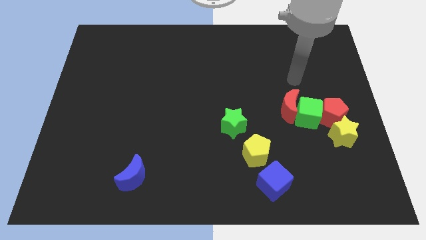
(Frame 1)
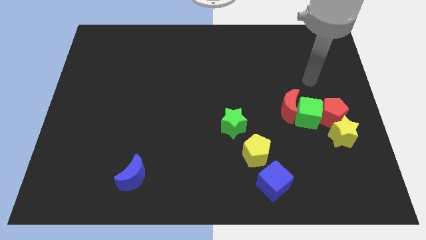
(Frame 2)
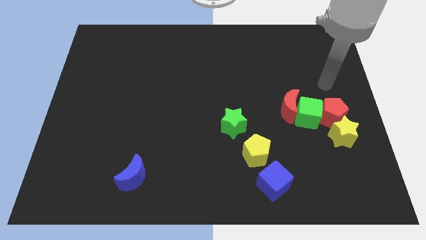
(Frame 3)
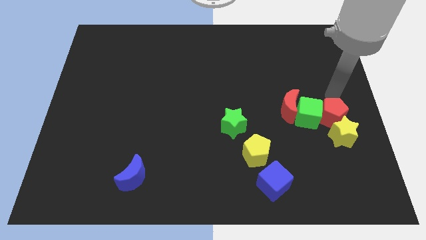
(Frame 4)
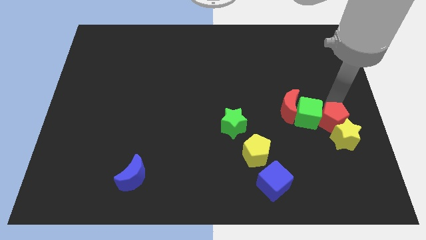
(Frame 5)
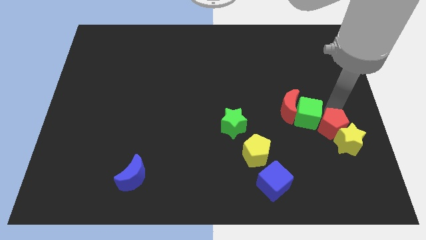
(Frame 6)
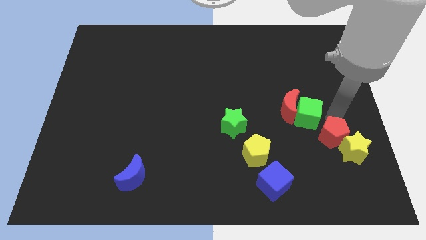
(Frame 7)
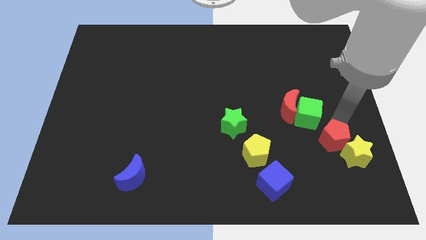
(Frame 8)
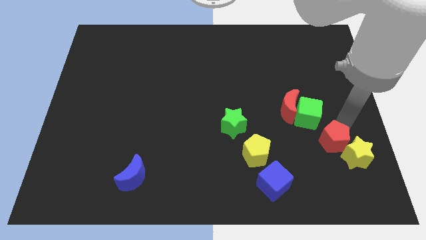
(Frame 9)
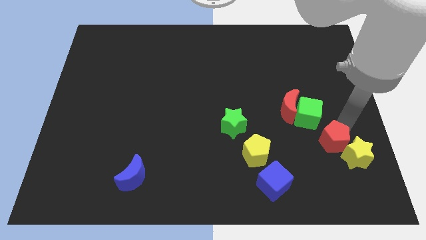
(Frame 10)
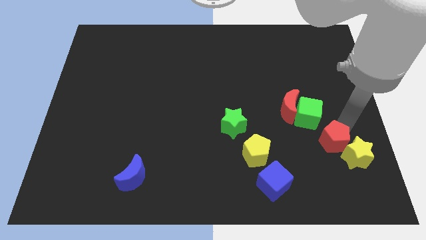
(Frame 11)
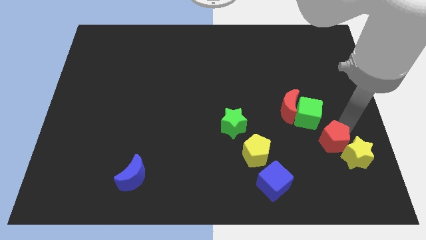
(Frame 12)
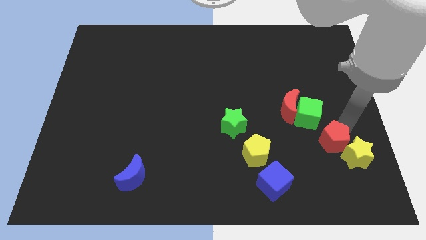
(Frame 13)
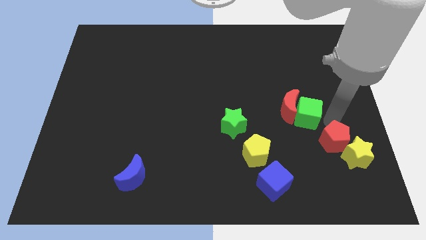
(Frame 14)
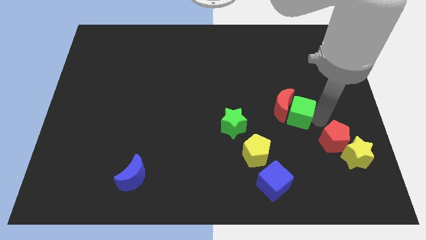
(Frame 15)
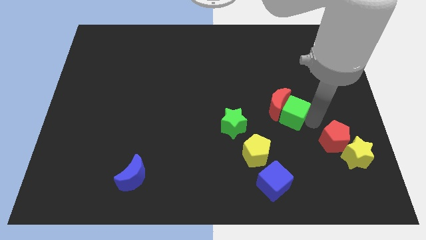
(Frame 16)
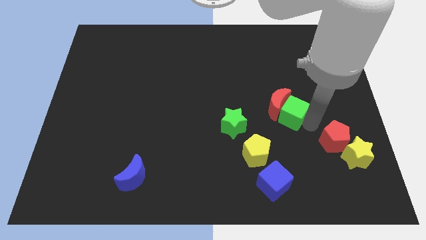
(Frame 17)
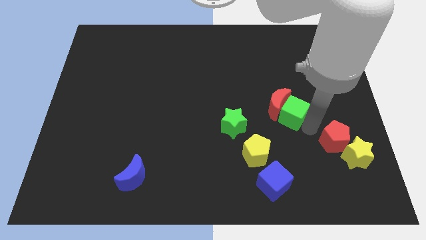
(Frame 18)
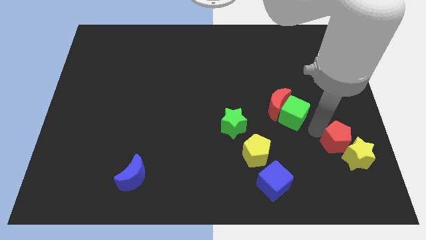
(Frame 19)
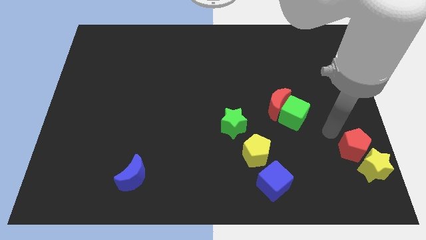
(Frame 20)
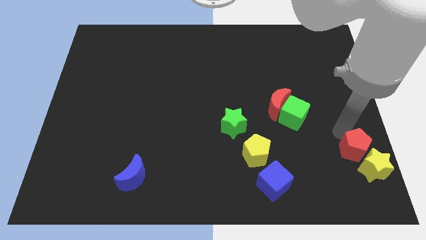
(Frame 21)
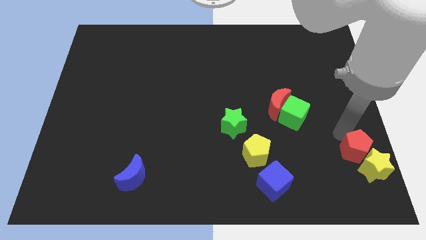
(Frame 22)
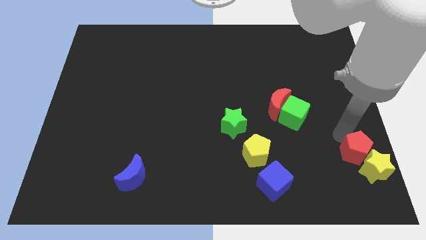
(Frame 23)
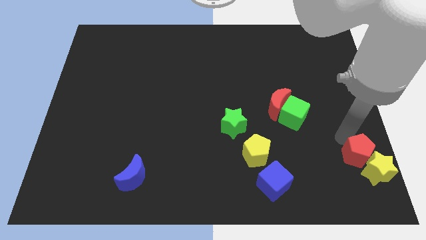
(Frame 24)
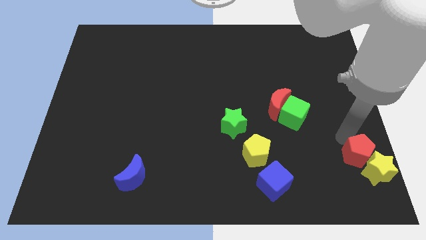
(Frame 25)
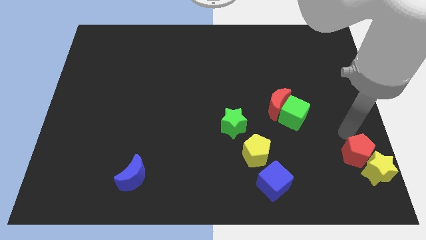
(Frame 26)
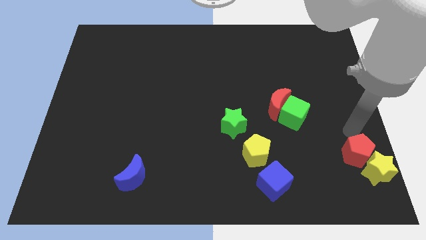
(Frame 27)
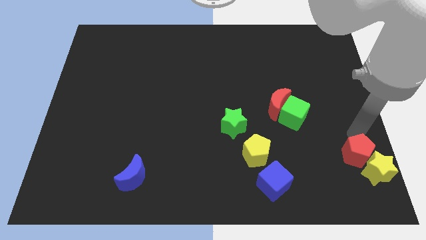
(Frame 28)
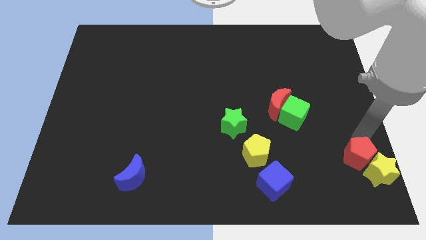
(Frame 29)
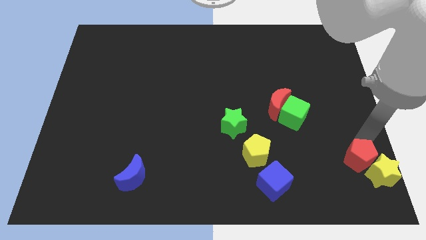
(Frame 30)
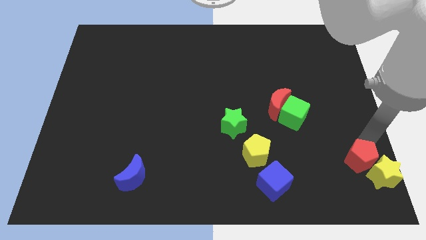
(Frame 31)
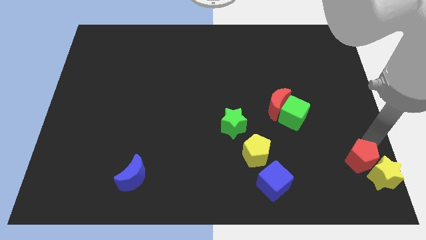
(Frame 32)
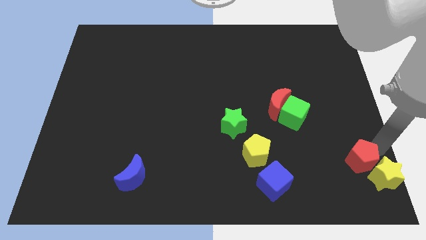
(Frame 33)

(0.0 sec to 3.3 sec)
move the red pentagon along with the yellow star to the bottom right of the board

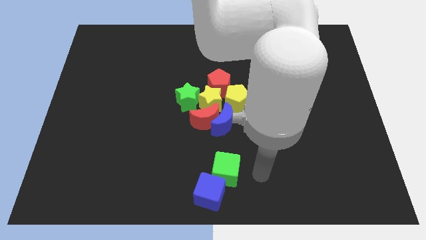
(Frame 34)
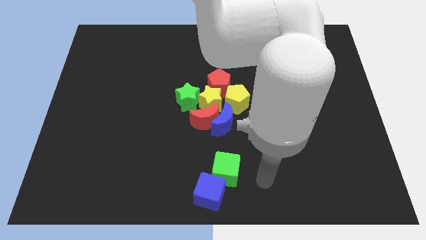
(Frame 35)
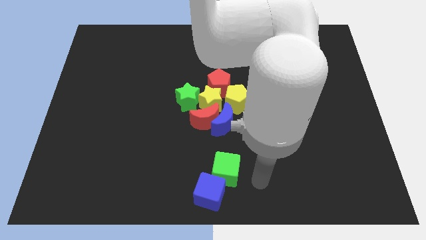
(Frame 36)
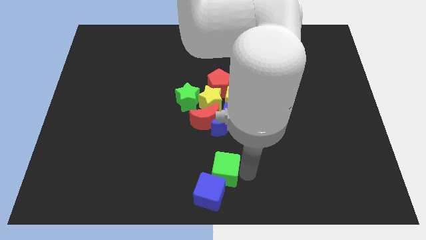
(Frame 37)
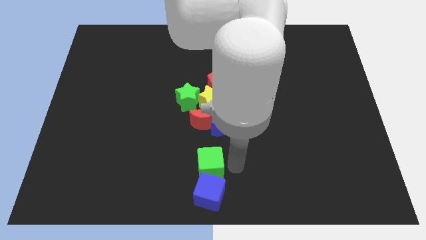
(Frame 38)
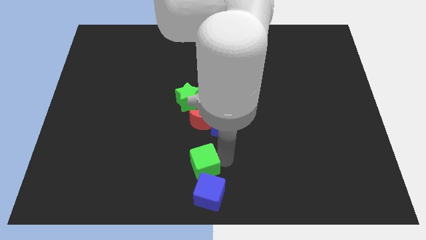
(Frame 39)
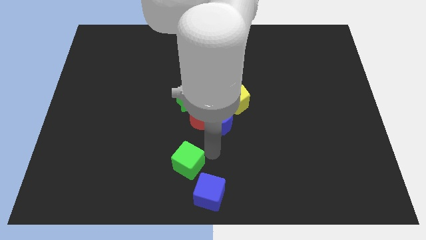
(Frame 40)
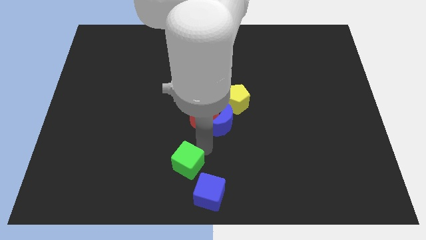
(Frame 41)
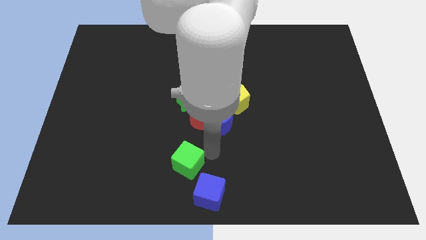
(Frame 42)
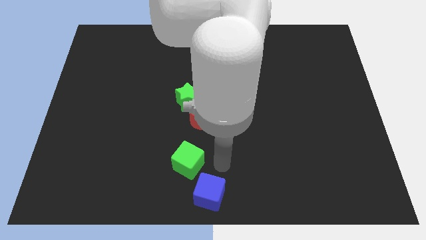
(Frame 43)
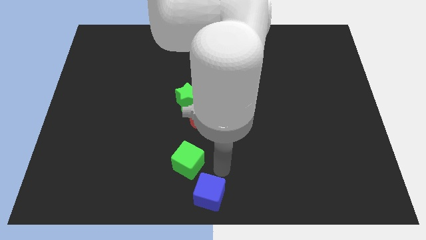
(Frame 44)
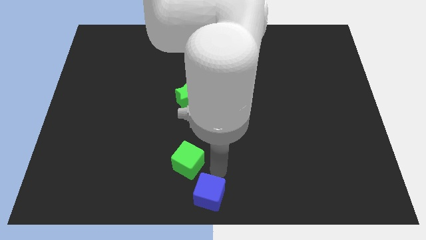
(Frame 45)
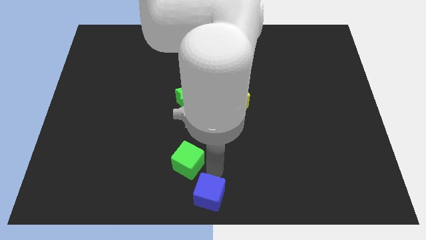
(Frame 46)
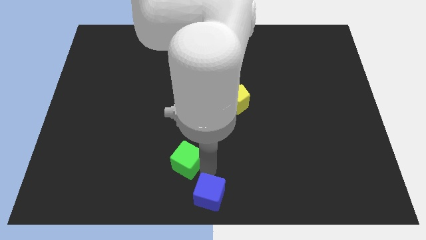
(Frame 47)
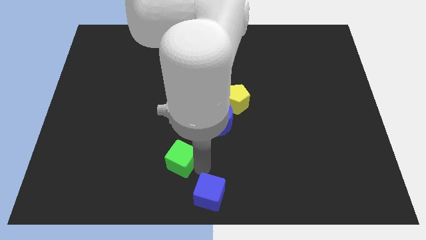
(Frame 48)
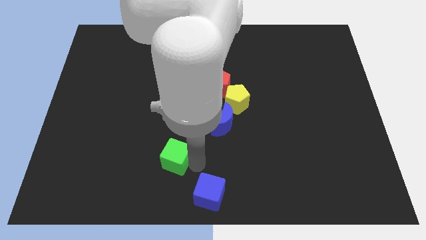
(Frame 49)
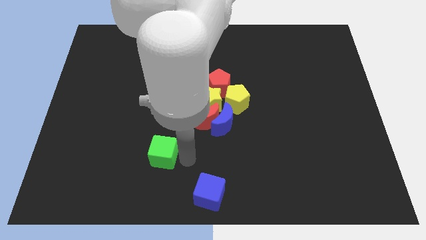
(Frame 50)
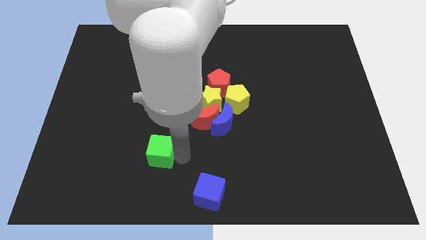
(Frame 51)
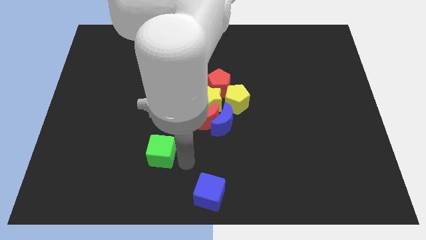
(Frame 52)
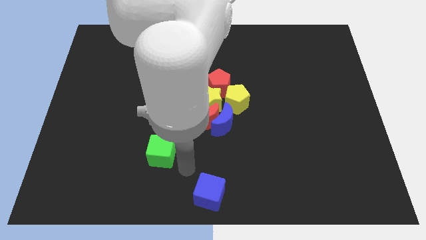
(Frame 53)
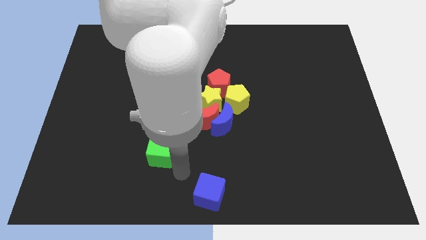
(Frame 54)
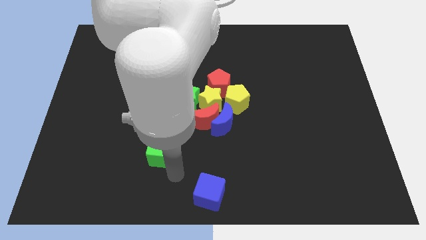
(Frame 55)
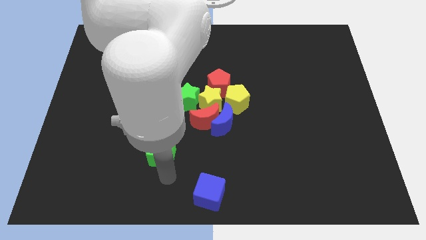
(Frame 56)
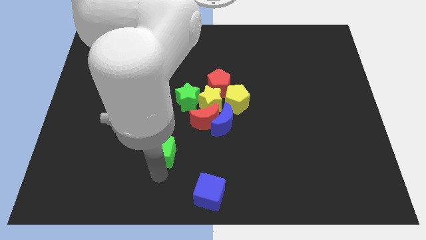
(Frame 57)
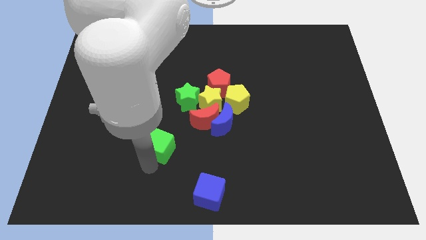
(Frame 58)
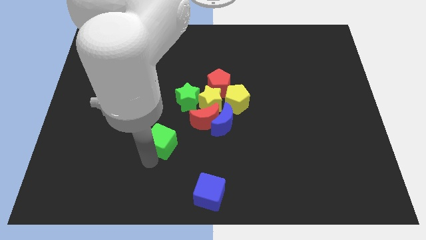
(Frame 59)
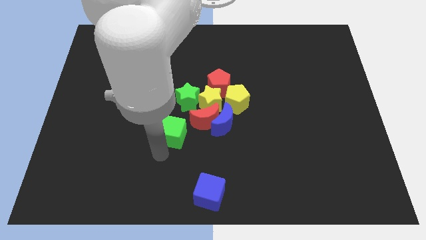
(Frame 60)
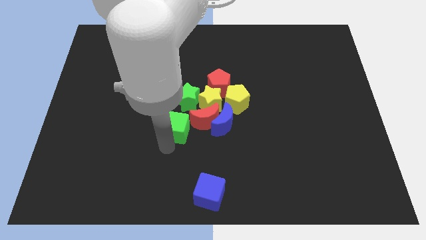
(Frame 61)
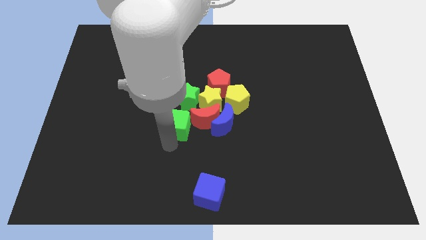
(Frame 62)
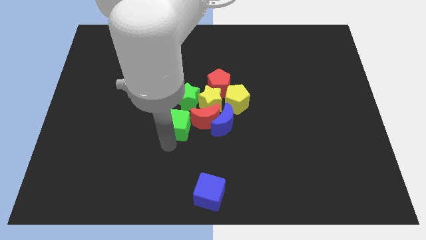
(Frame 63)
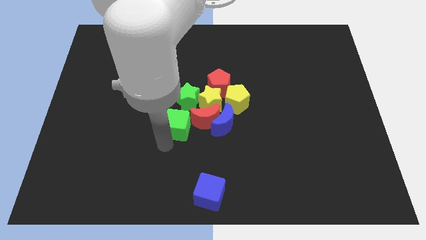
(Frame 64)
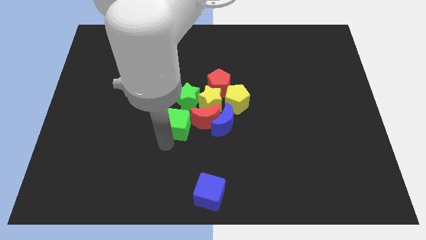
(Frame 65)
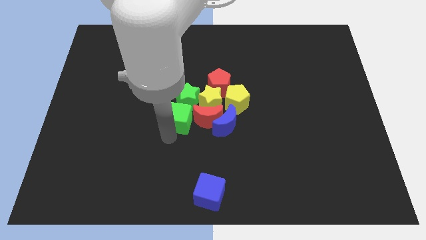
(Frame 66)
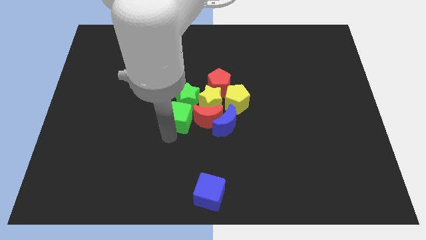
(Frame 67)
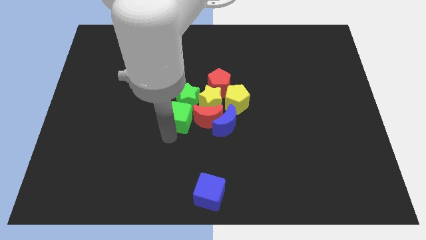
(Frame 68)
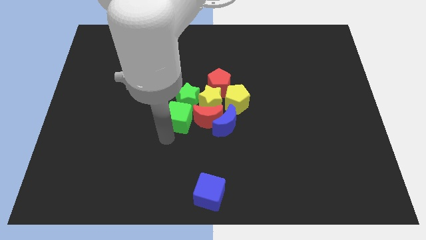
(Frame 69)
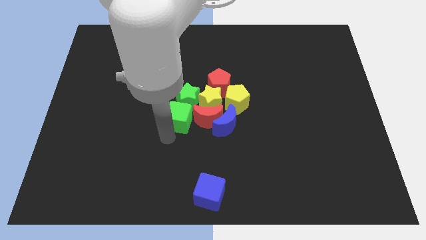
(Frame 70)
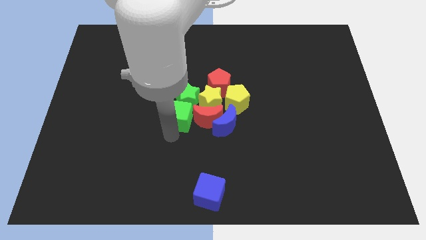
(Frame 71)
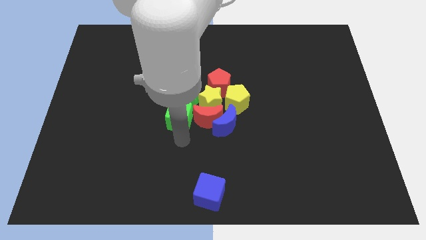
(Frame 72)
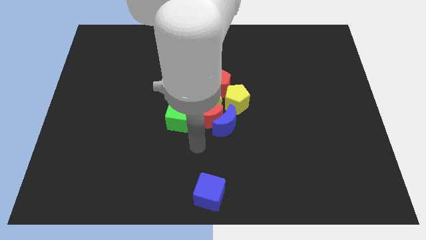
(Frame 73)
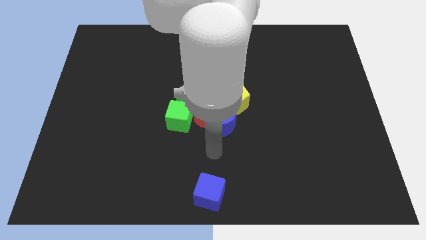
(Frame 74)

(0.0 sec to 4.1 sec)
push the green cube to the left side of the red moon

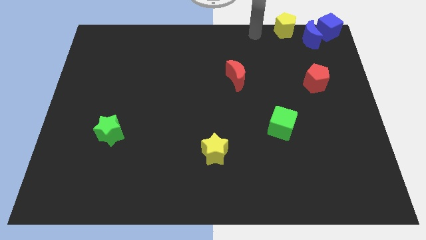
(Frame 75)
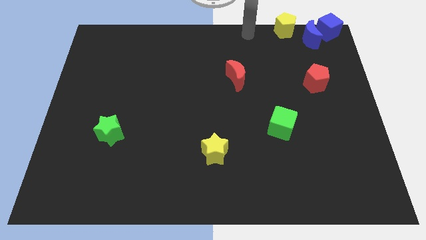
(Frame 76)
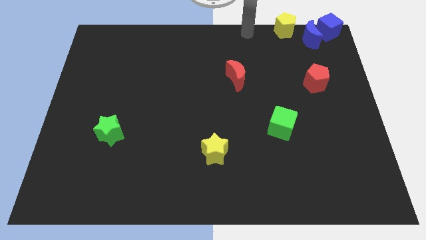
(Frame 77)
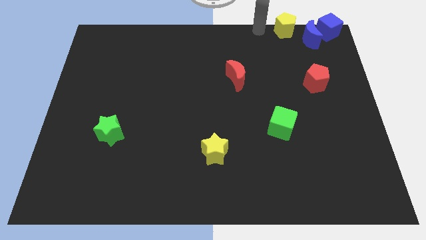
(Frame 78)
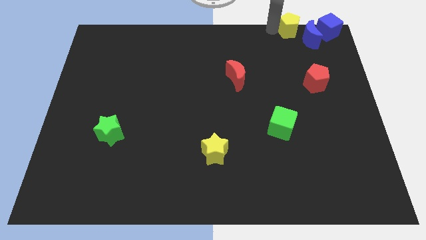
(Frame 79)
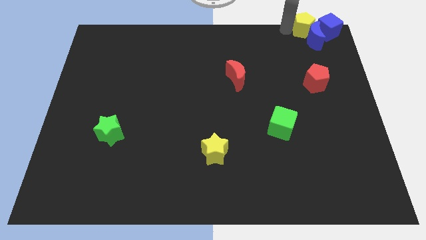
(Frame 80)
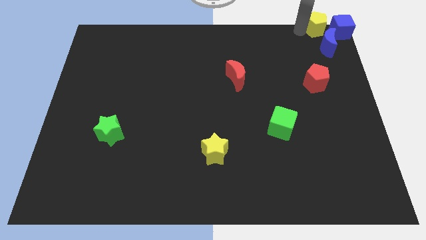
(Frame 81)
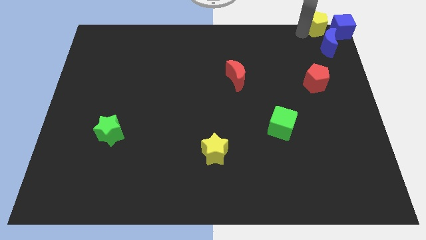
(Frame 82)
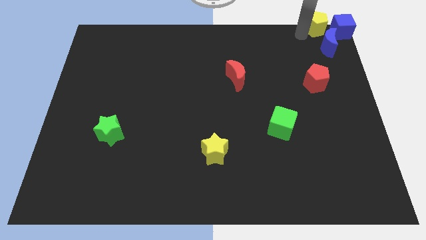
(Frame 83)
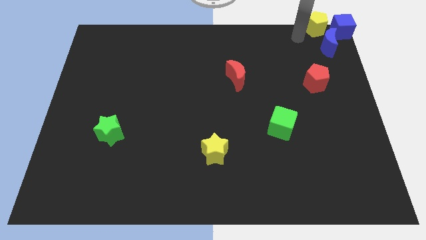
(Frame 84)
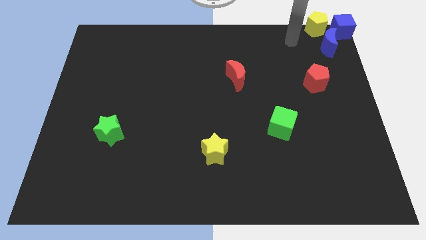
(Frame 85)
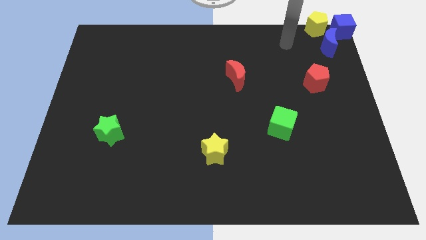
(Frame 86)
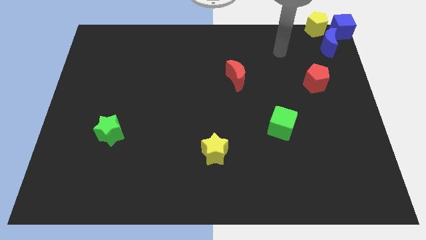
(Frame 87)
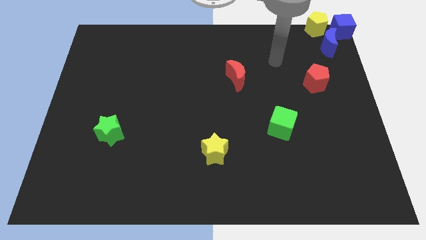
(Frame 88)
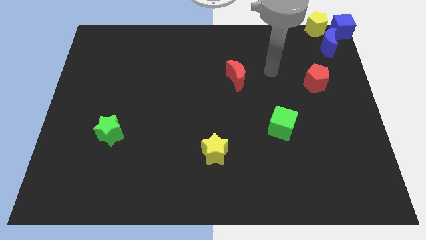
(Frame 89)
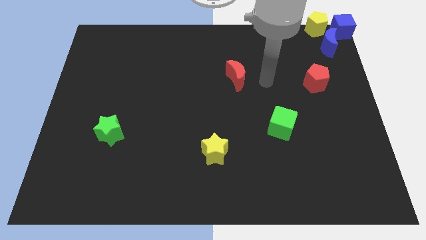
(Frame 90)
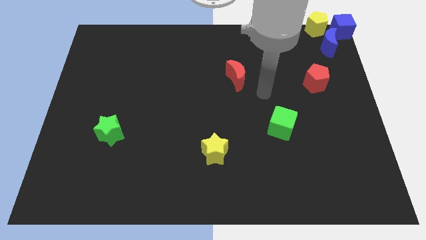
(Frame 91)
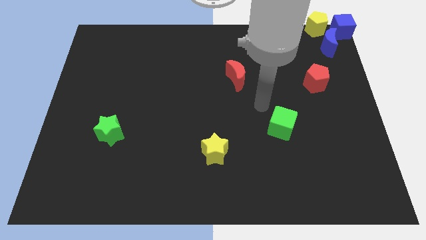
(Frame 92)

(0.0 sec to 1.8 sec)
place your arm in between the red moon and green cube
